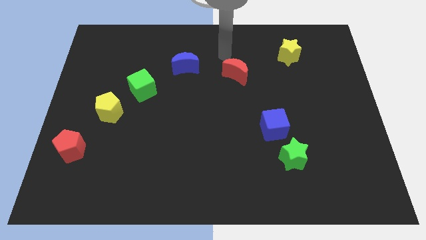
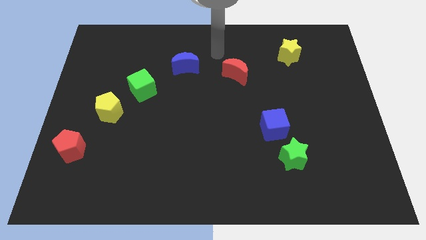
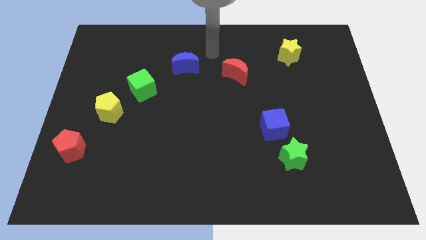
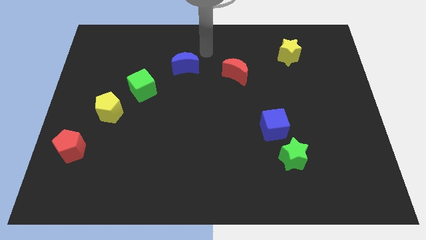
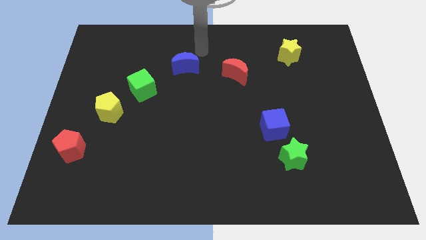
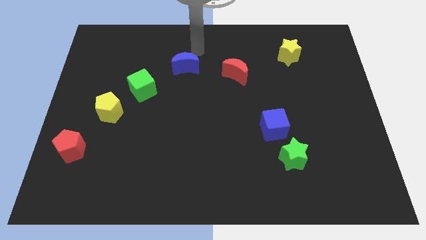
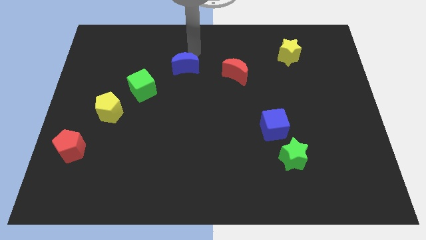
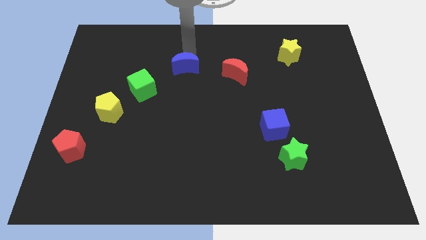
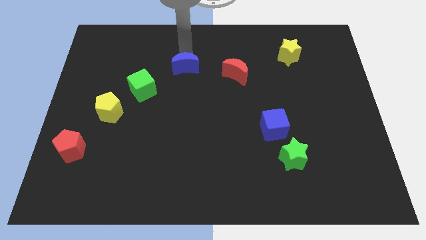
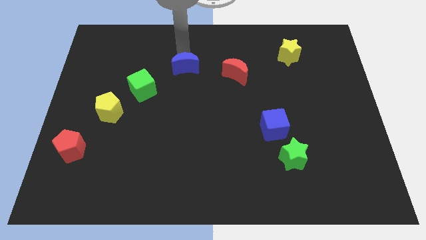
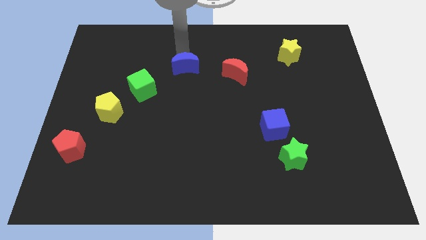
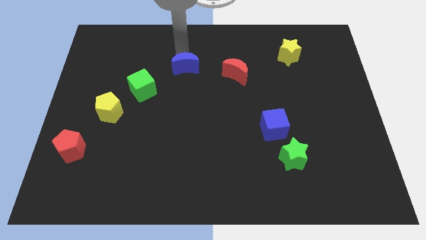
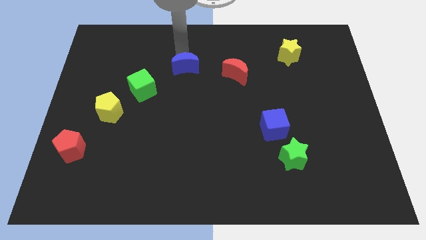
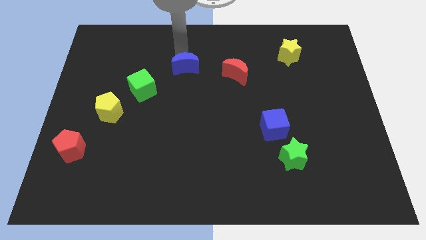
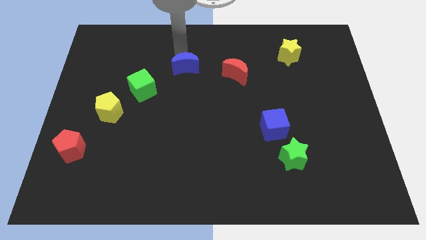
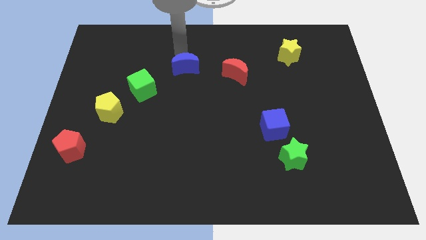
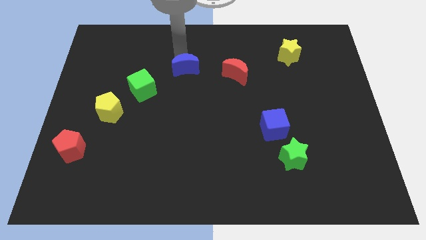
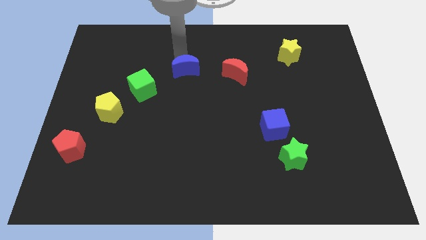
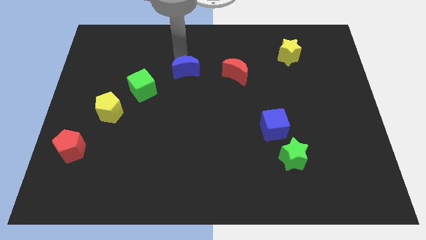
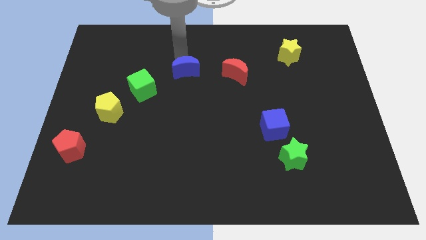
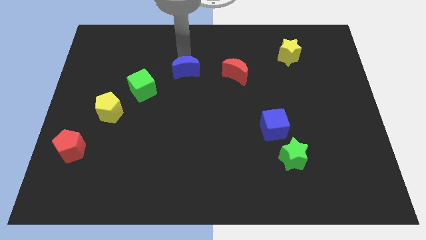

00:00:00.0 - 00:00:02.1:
slightly push the blue moon downwards

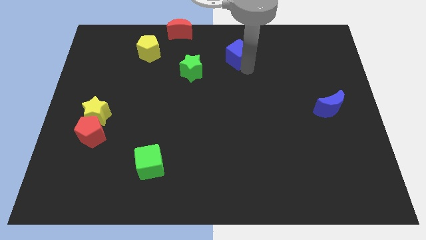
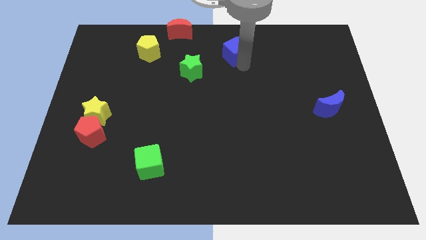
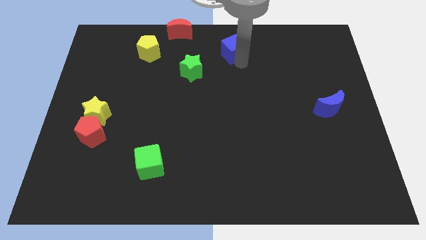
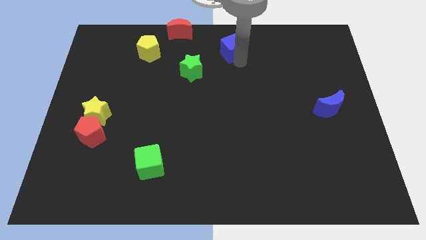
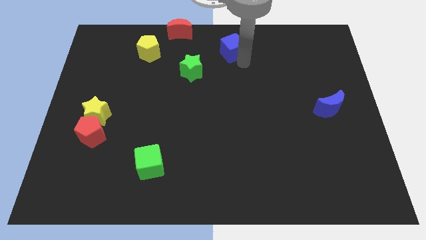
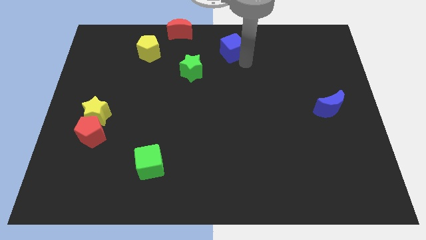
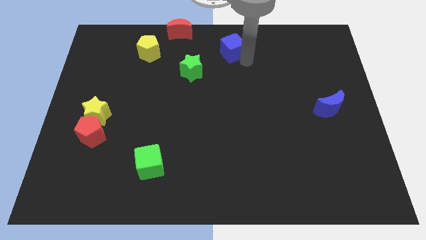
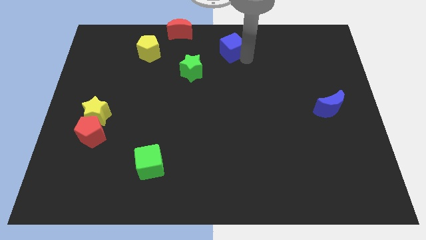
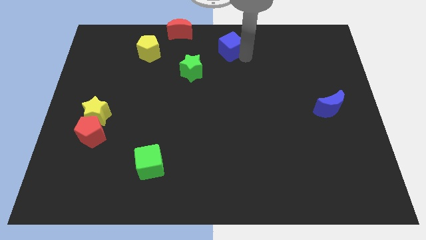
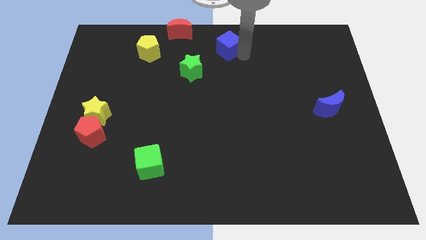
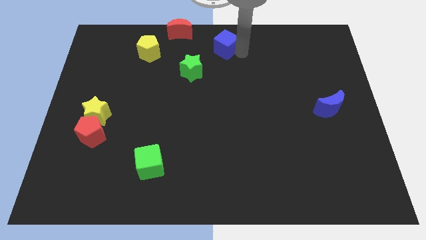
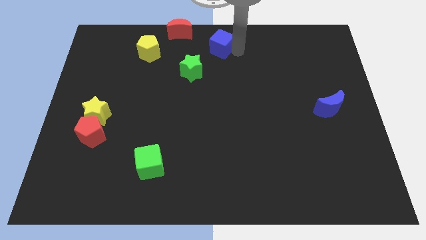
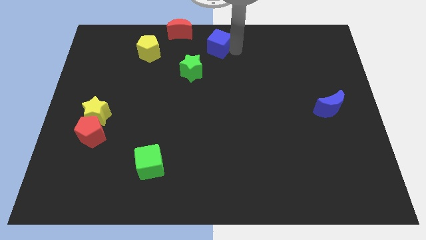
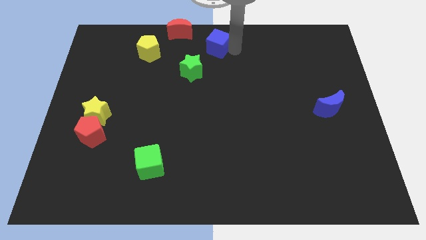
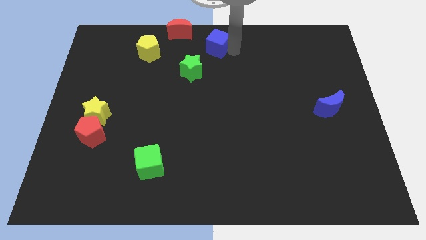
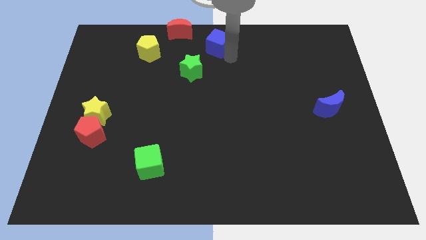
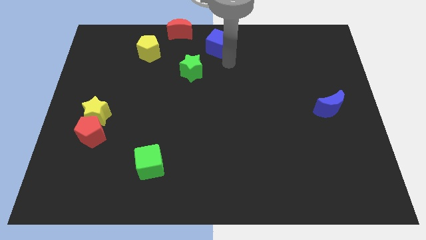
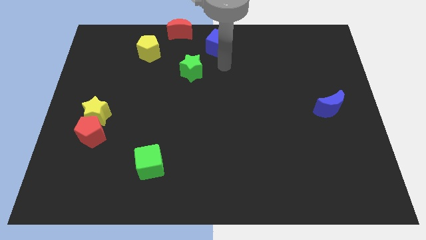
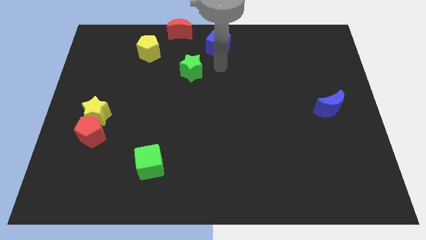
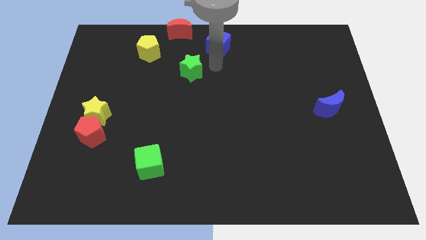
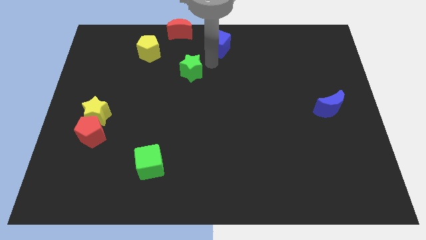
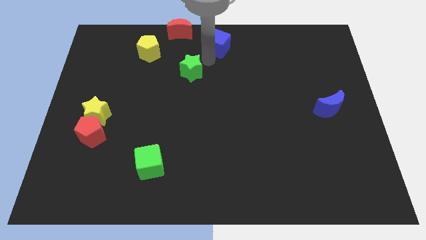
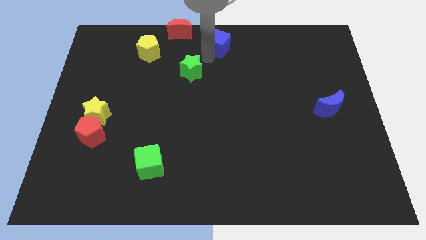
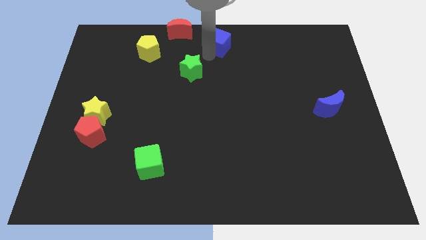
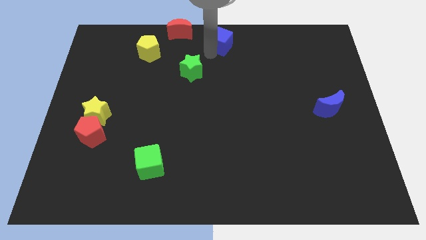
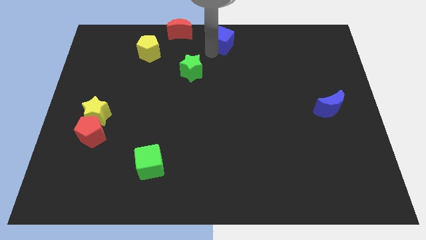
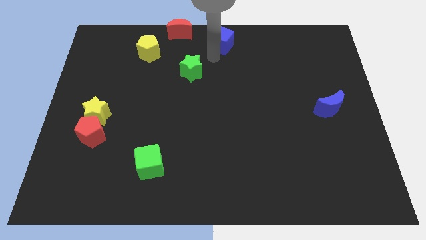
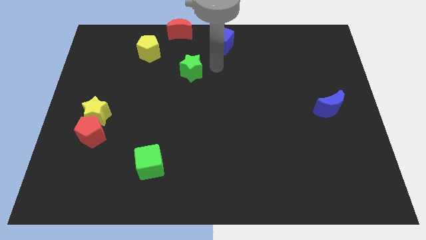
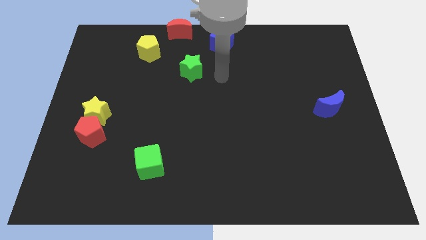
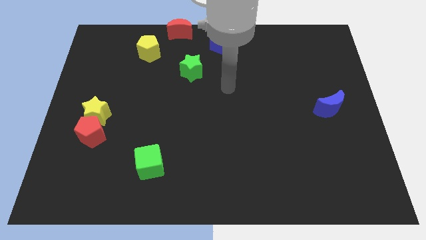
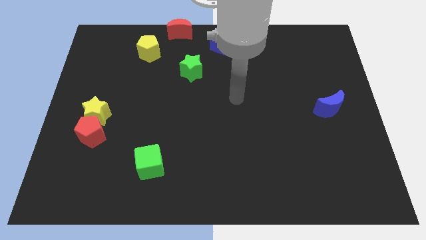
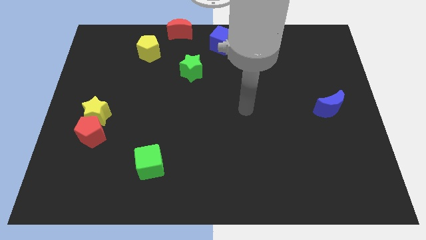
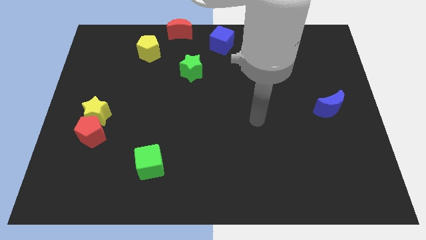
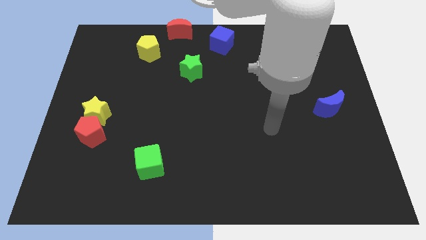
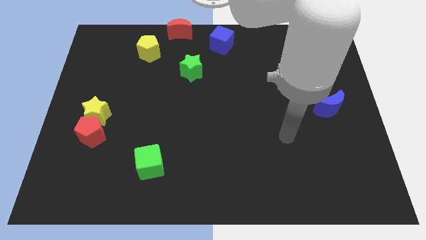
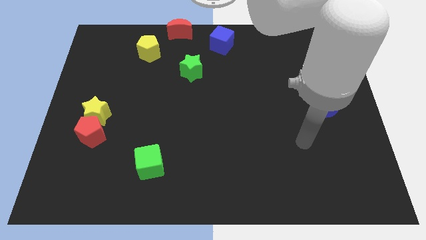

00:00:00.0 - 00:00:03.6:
push the blue cube to the top center

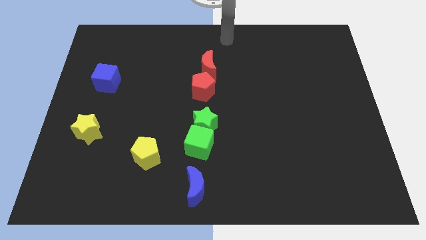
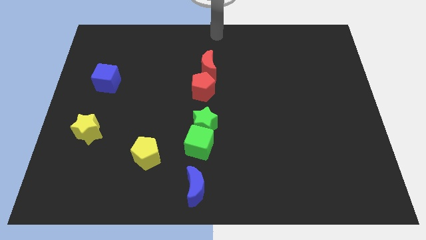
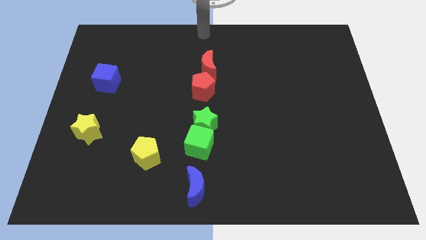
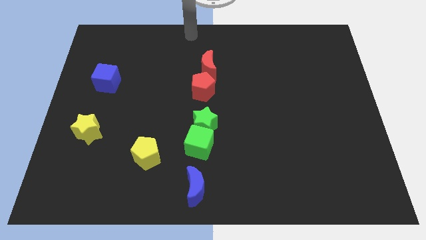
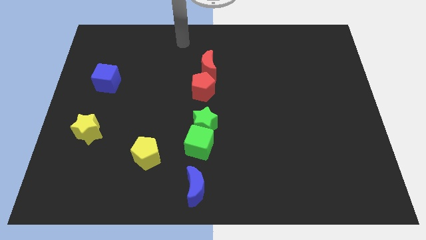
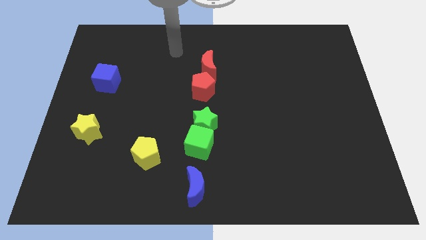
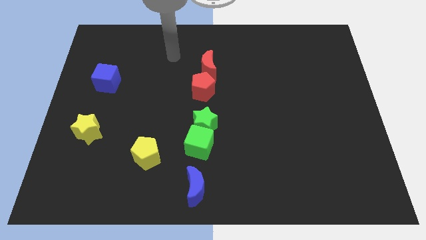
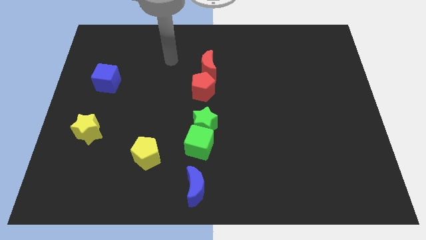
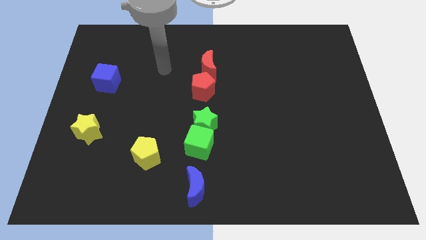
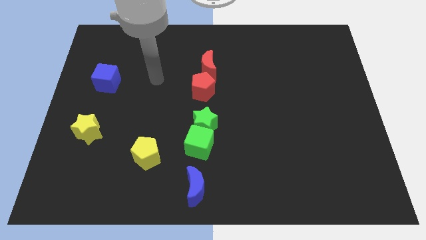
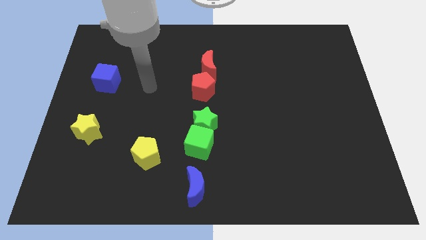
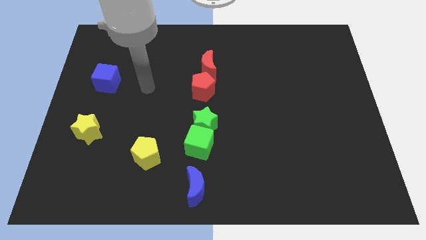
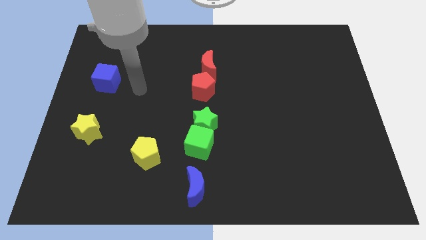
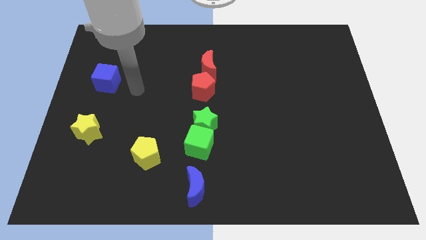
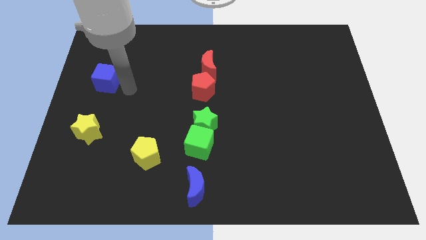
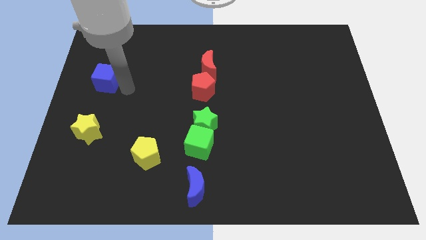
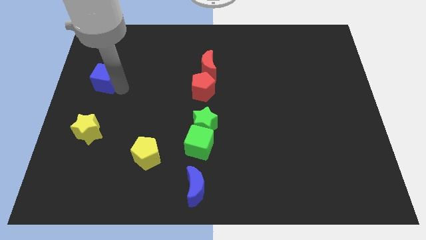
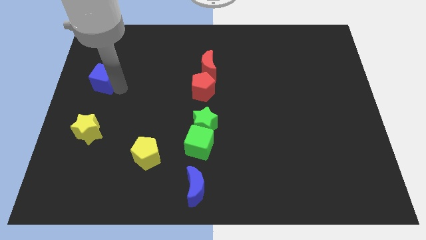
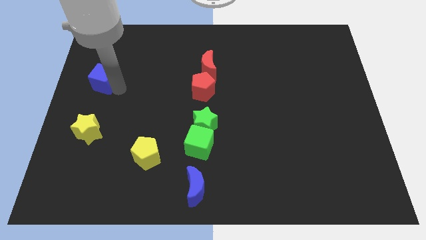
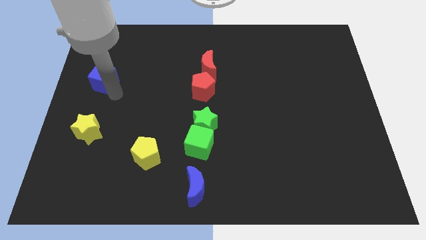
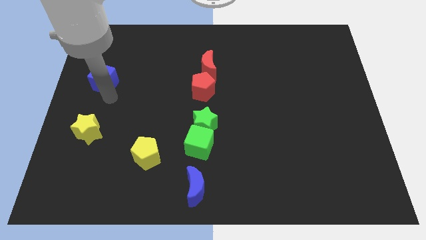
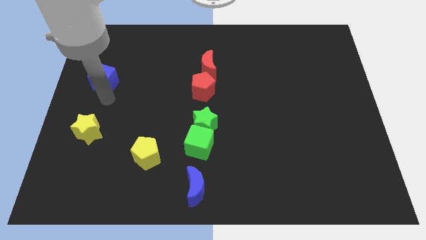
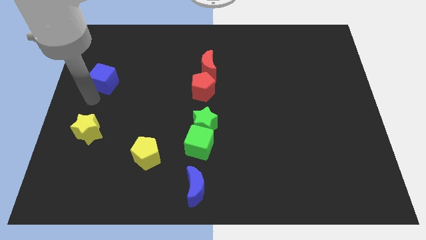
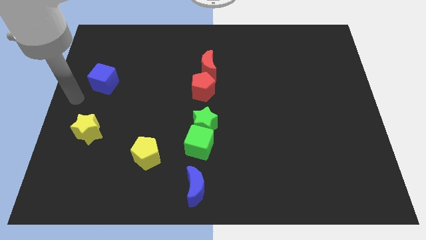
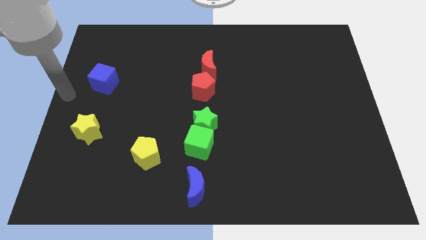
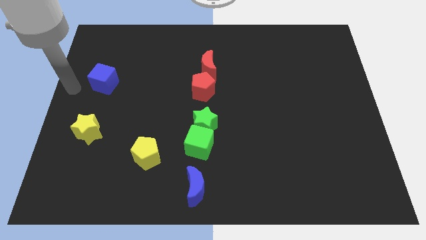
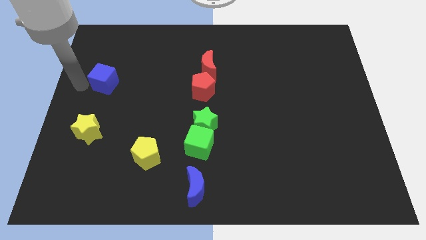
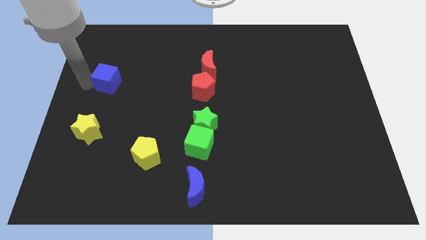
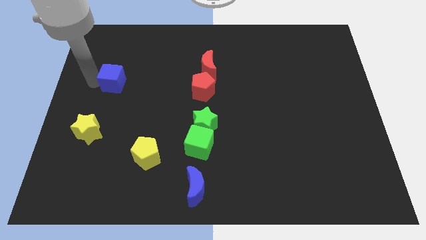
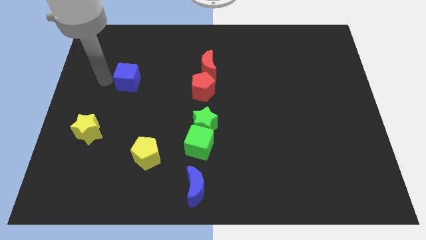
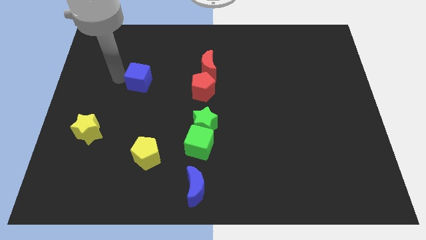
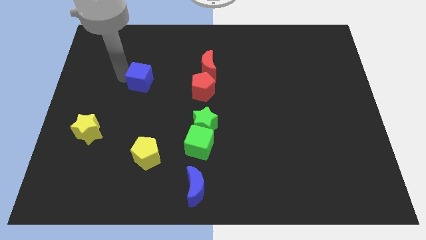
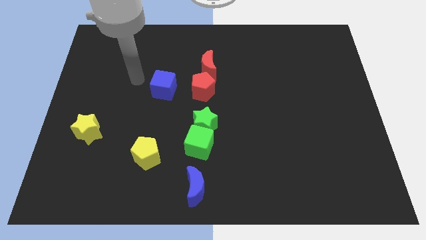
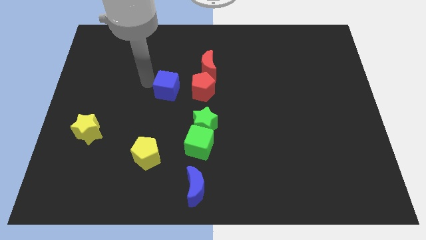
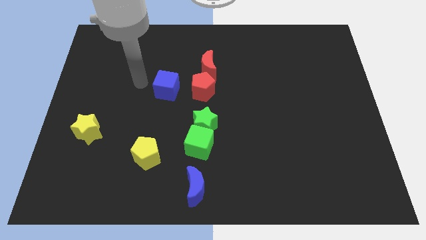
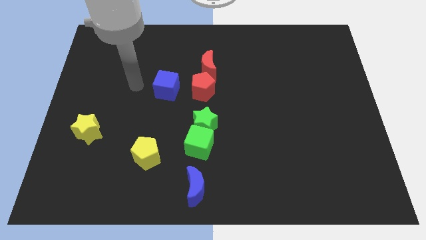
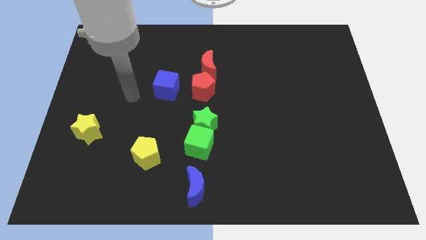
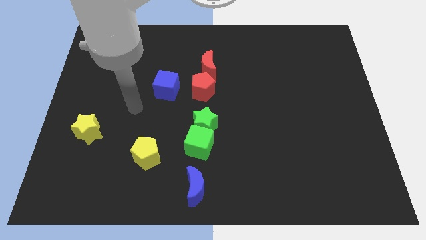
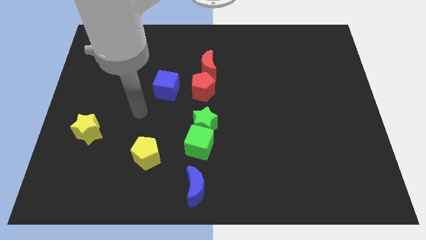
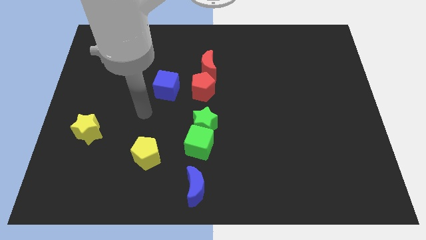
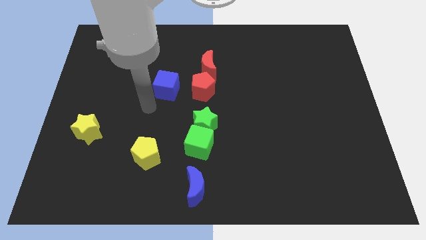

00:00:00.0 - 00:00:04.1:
push the red pentagon to the left of the blue cube
